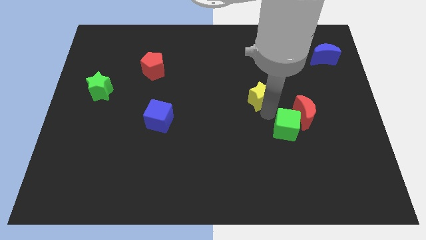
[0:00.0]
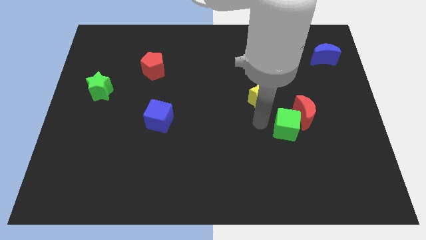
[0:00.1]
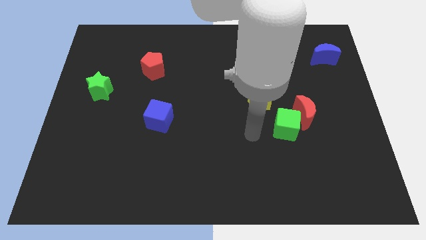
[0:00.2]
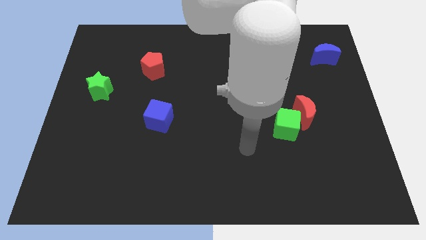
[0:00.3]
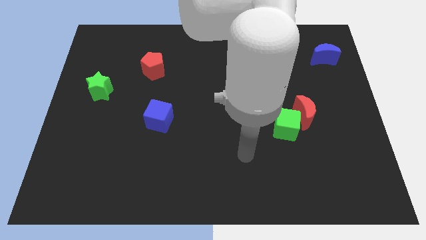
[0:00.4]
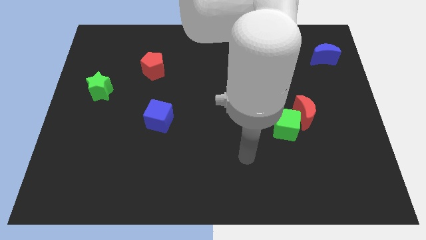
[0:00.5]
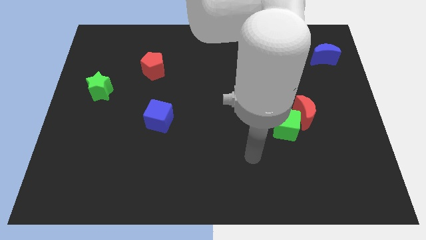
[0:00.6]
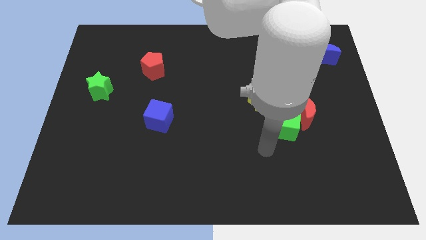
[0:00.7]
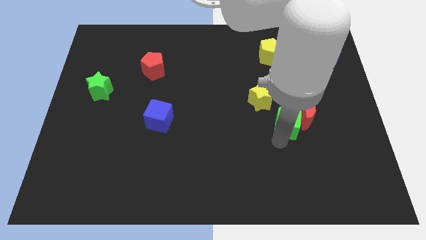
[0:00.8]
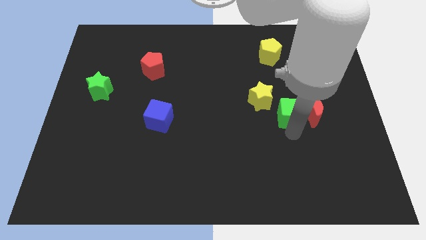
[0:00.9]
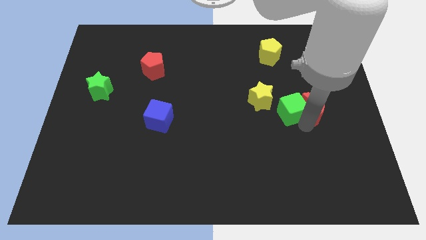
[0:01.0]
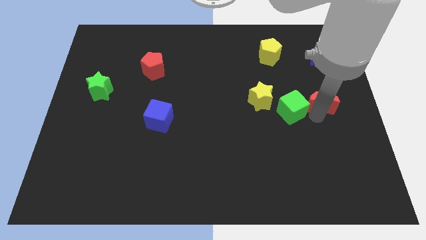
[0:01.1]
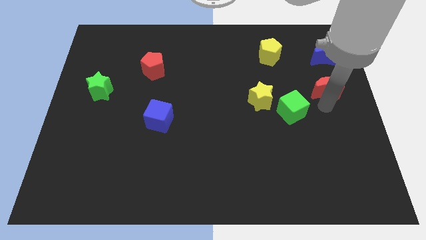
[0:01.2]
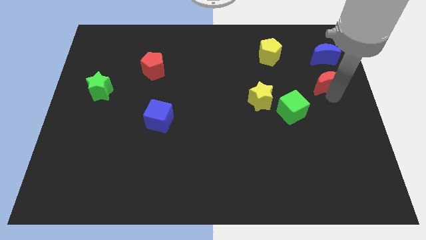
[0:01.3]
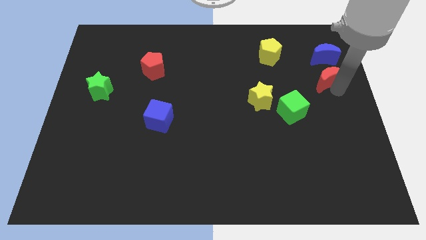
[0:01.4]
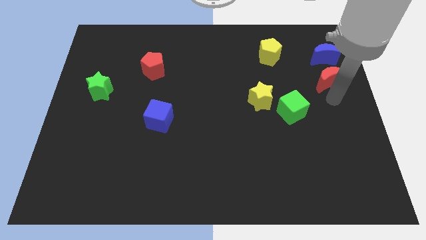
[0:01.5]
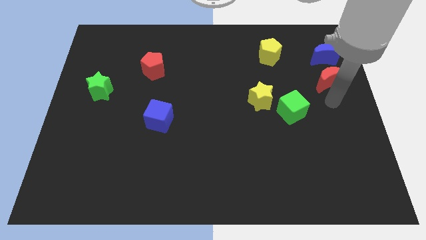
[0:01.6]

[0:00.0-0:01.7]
place the red moon down to the blue moon

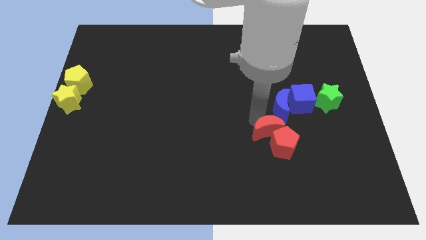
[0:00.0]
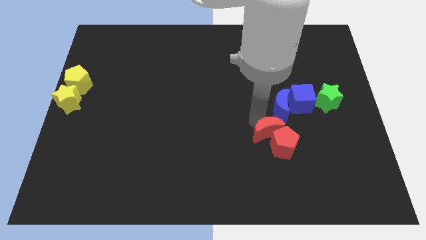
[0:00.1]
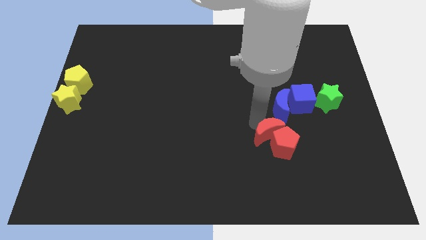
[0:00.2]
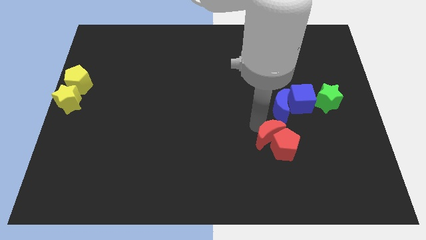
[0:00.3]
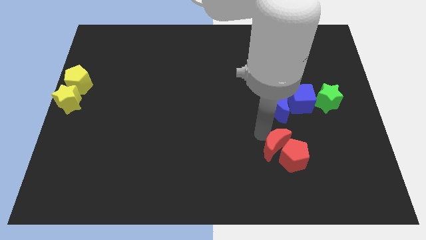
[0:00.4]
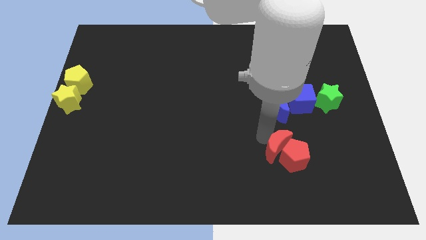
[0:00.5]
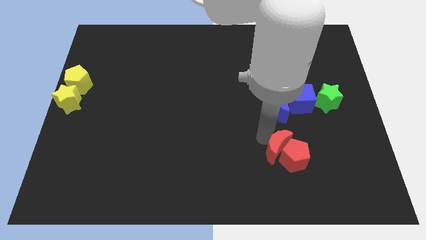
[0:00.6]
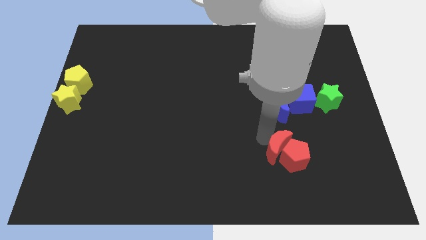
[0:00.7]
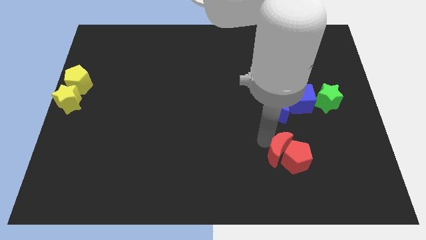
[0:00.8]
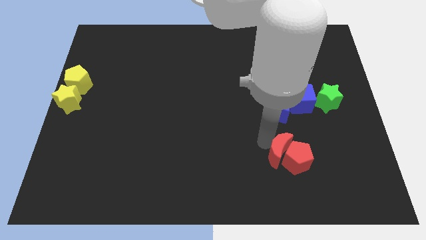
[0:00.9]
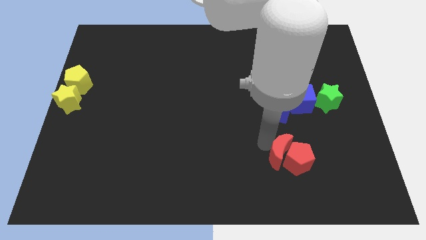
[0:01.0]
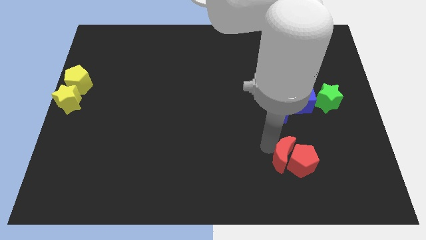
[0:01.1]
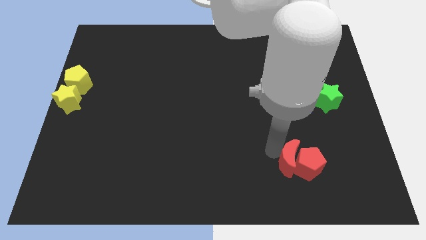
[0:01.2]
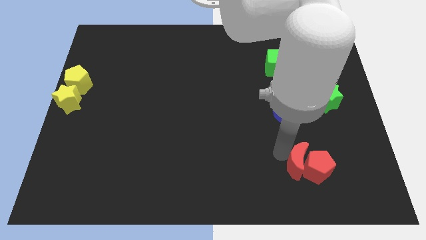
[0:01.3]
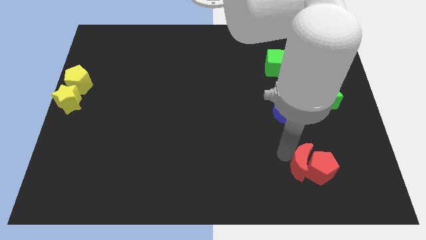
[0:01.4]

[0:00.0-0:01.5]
move the red moon into the red pentagon

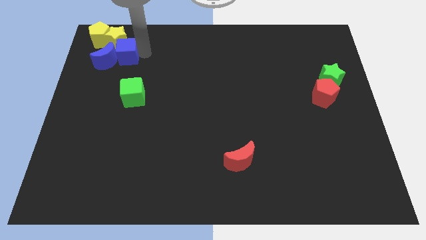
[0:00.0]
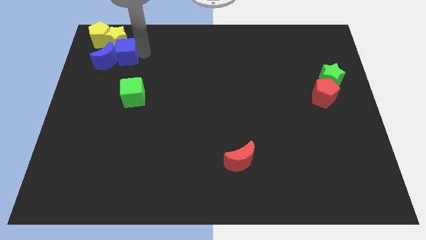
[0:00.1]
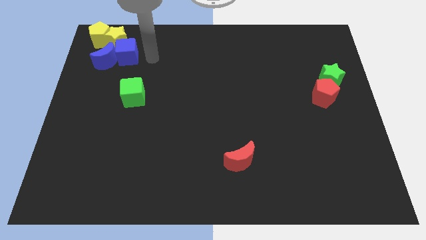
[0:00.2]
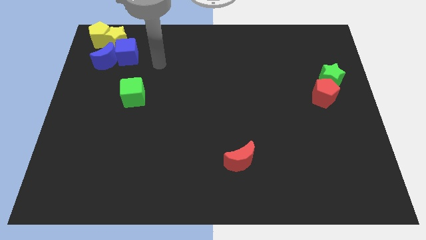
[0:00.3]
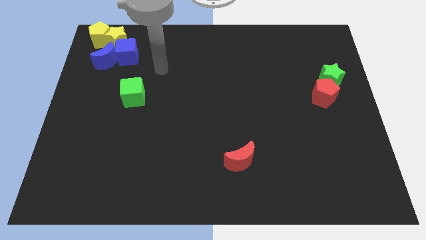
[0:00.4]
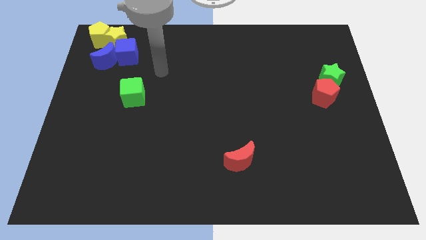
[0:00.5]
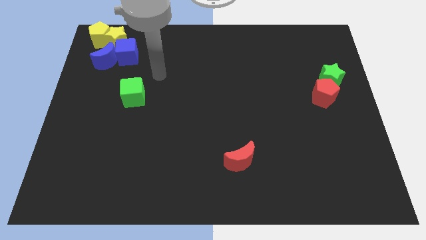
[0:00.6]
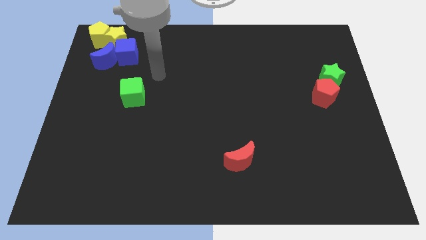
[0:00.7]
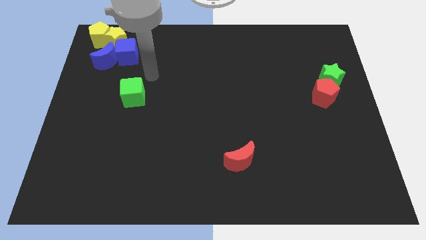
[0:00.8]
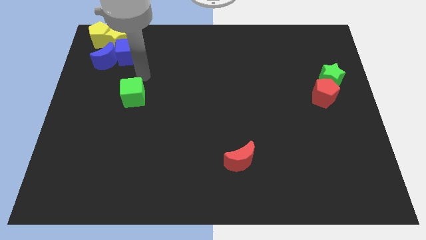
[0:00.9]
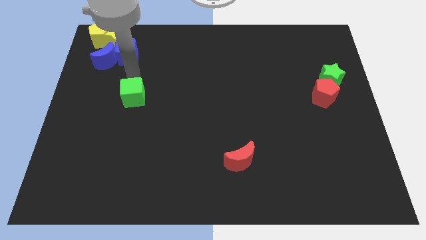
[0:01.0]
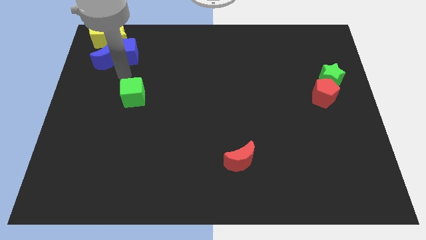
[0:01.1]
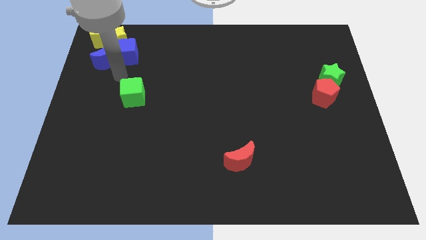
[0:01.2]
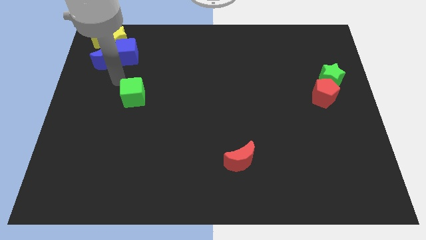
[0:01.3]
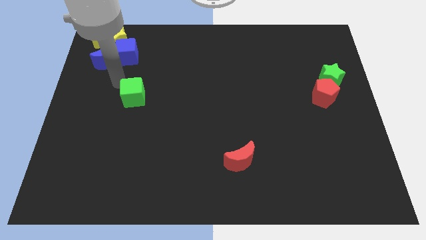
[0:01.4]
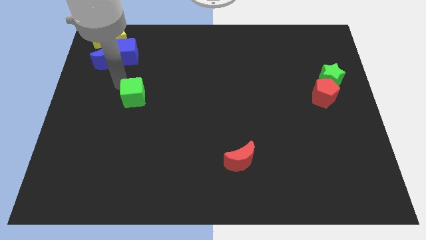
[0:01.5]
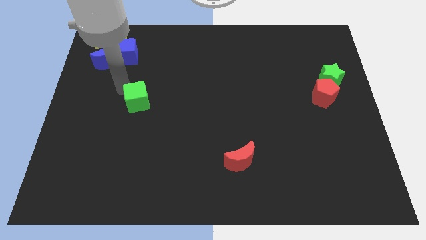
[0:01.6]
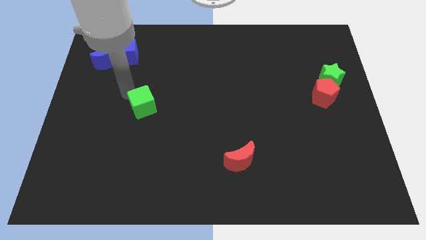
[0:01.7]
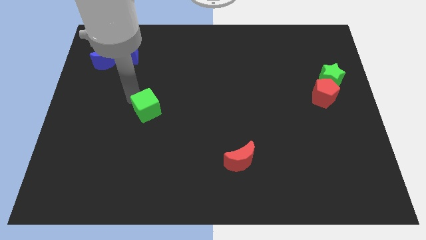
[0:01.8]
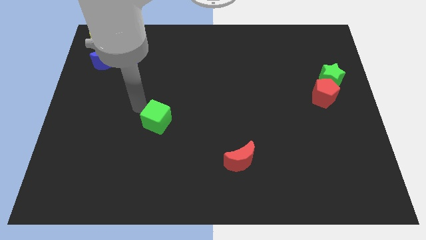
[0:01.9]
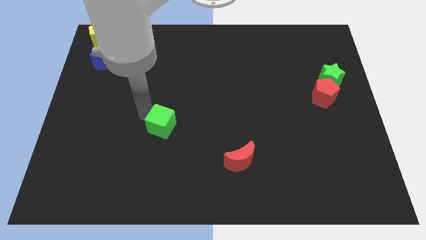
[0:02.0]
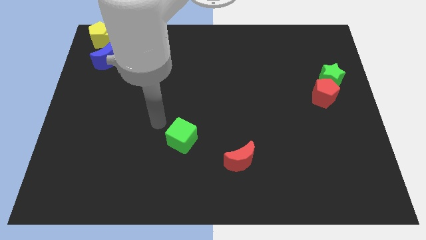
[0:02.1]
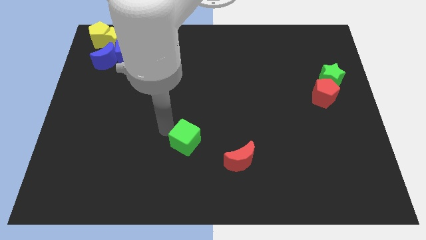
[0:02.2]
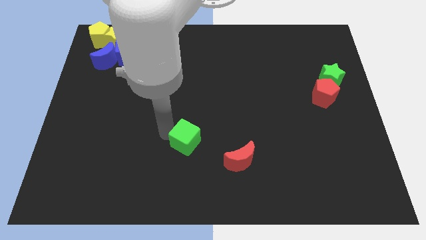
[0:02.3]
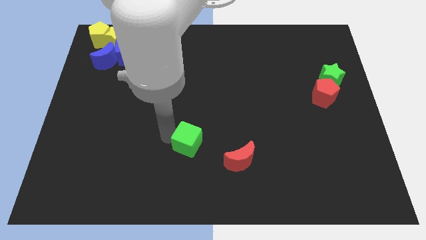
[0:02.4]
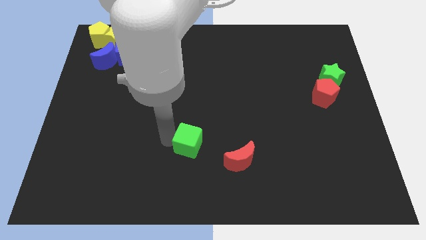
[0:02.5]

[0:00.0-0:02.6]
push green cube slightly towards the red crescent

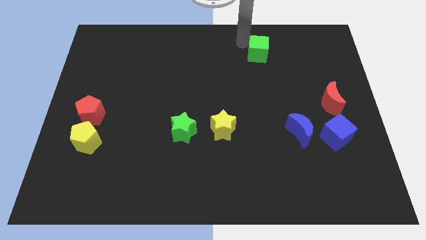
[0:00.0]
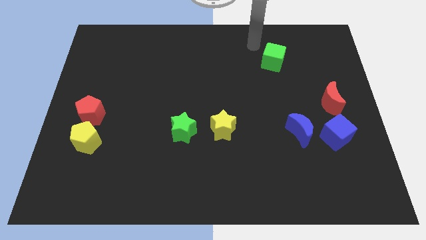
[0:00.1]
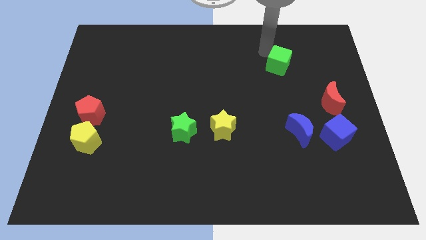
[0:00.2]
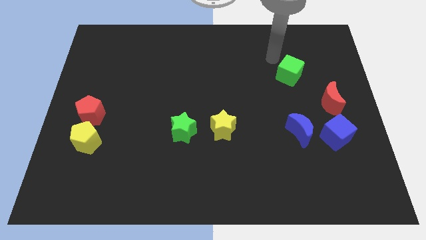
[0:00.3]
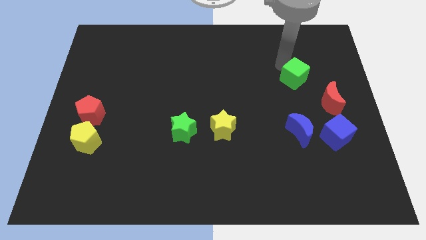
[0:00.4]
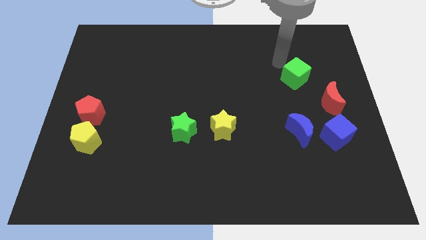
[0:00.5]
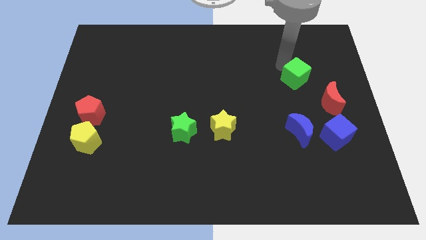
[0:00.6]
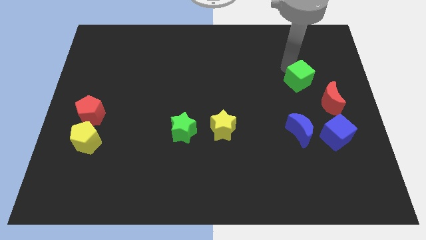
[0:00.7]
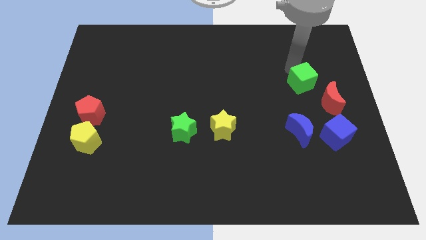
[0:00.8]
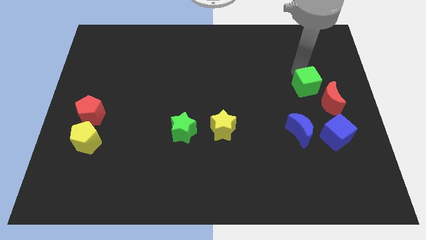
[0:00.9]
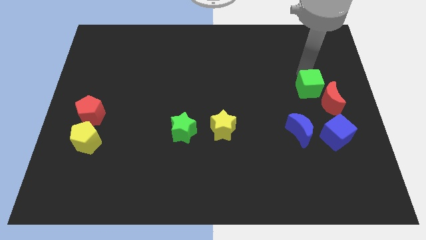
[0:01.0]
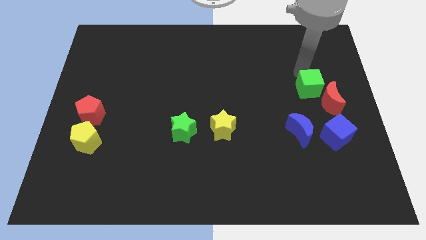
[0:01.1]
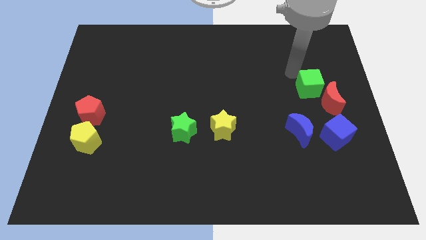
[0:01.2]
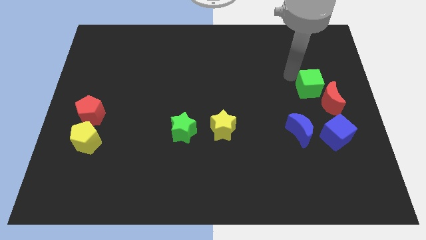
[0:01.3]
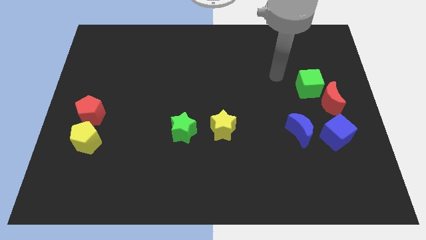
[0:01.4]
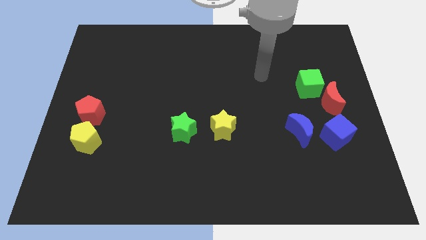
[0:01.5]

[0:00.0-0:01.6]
push the green cube close to the red crescent

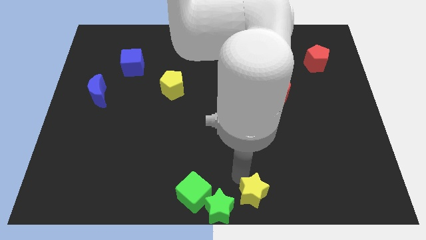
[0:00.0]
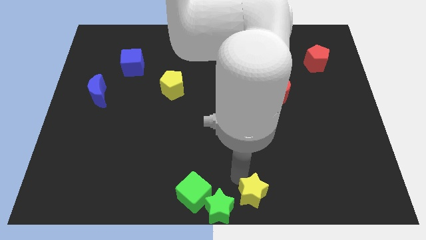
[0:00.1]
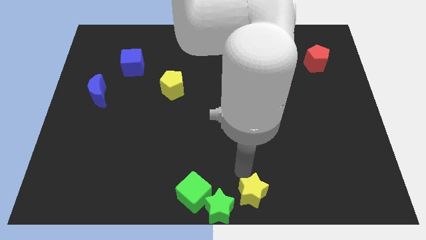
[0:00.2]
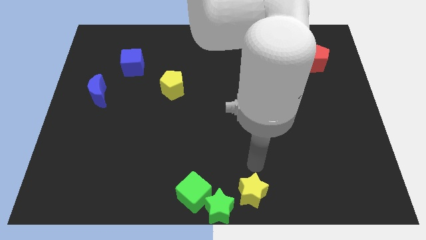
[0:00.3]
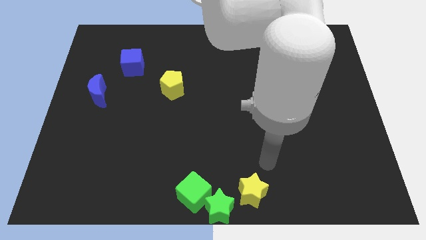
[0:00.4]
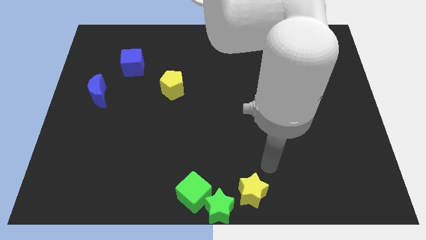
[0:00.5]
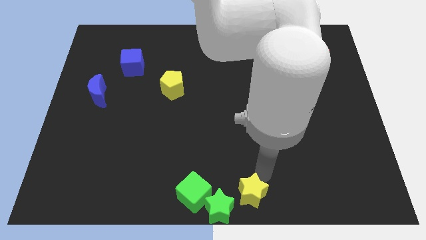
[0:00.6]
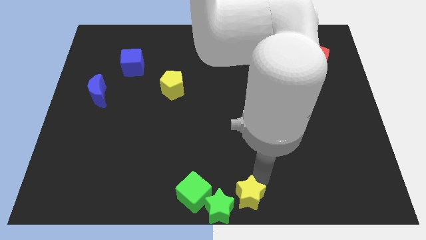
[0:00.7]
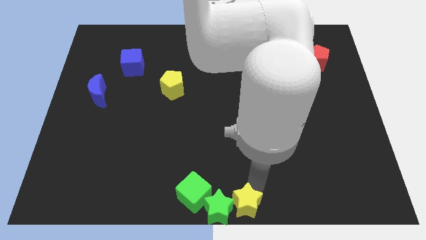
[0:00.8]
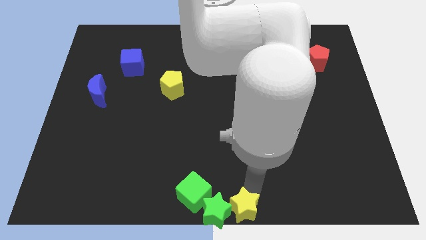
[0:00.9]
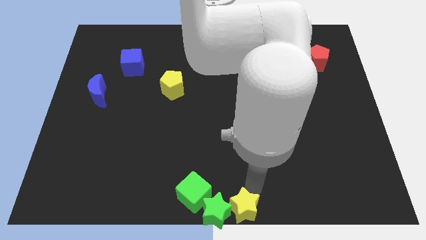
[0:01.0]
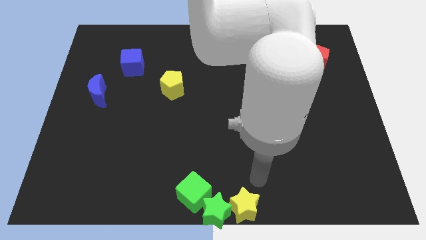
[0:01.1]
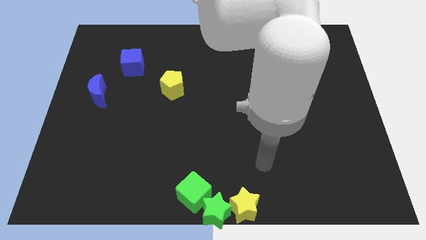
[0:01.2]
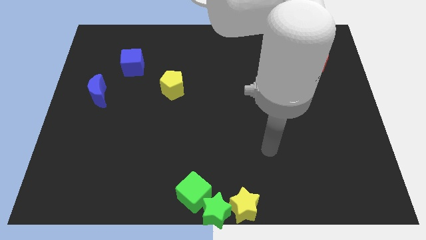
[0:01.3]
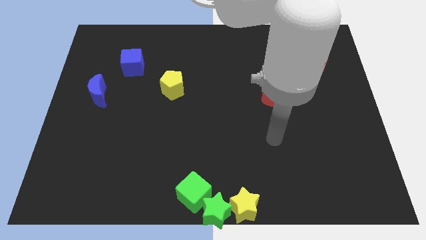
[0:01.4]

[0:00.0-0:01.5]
push the yellow star into green star

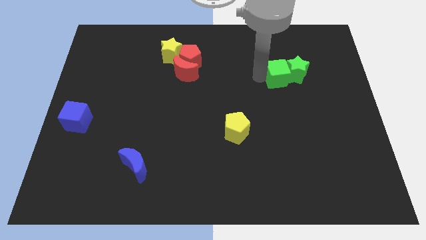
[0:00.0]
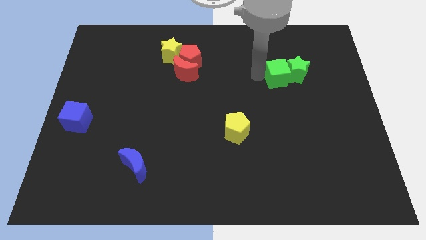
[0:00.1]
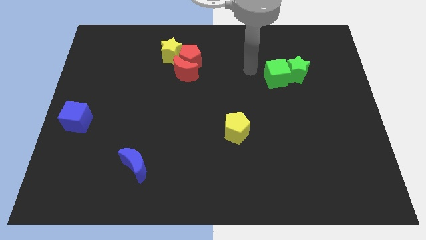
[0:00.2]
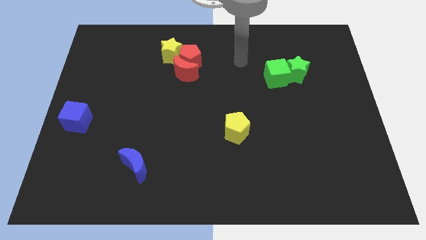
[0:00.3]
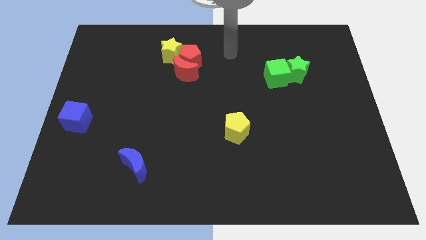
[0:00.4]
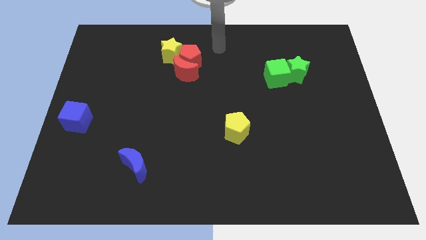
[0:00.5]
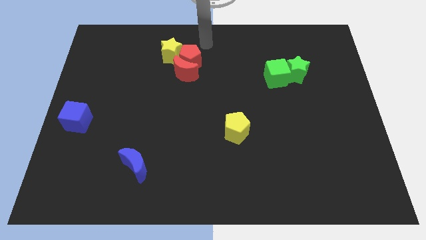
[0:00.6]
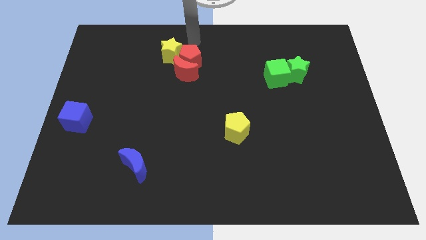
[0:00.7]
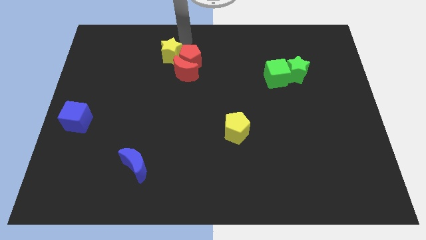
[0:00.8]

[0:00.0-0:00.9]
point your arm at the top of the red pentagon
